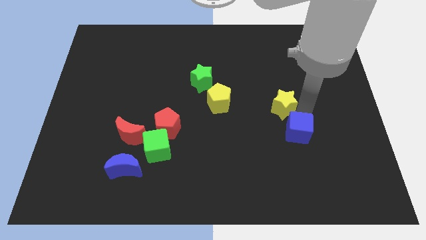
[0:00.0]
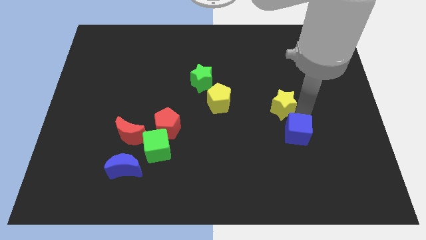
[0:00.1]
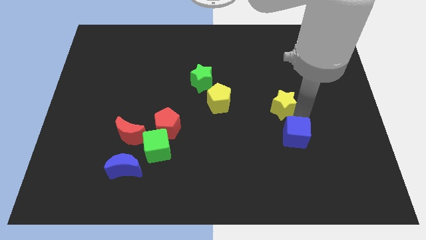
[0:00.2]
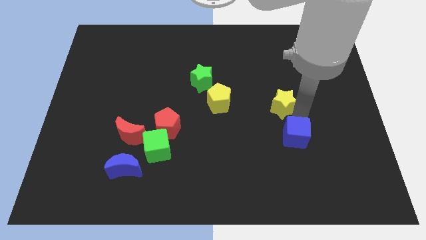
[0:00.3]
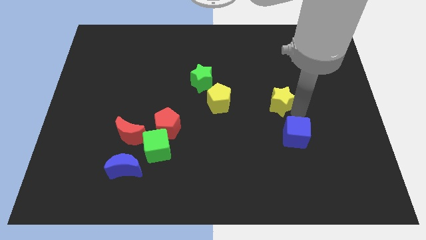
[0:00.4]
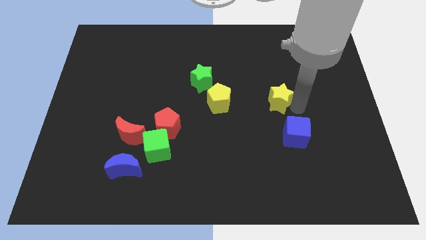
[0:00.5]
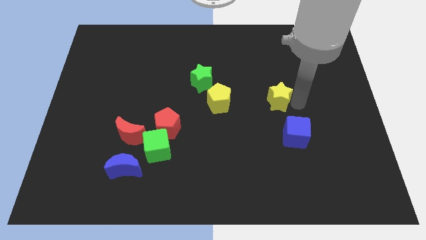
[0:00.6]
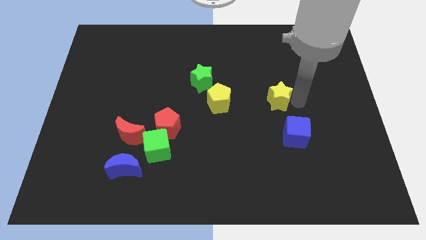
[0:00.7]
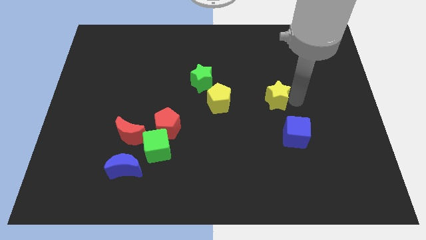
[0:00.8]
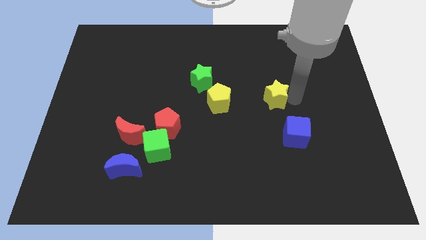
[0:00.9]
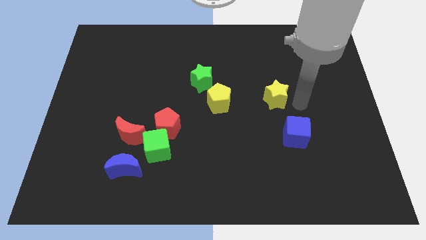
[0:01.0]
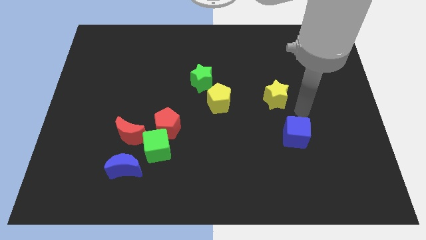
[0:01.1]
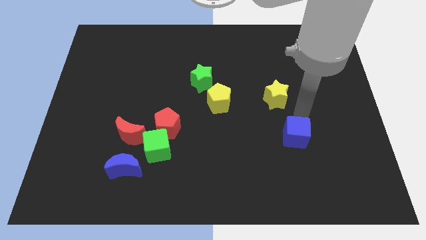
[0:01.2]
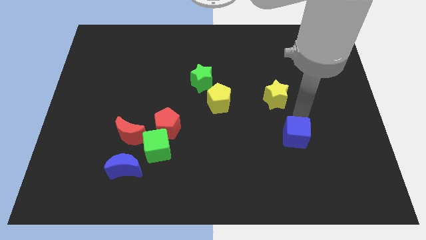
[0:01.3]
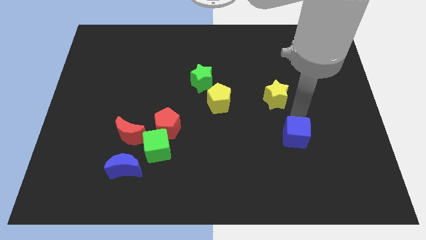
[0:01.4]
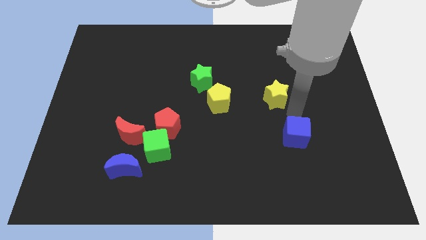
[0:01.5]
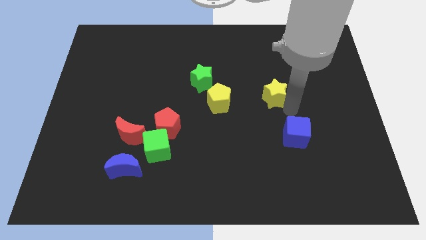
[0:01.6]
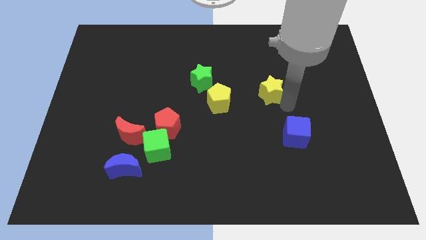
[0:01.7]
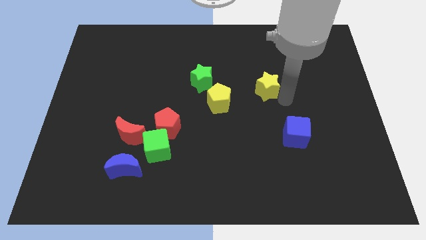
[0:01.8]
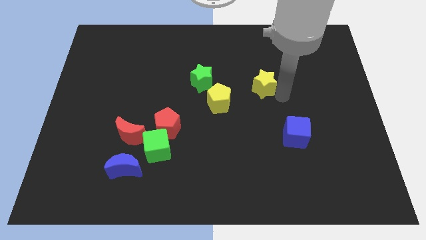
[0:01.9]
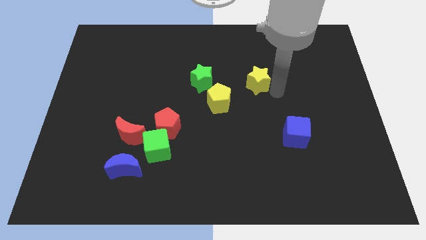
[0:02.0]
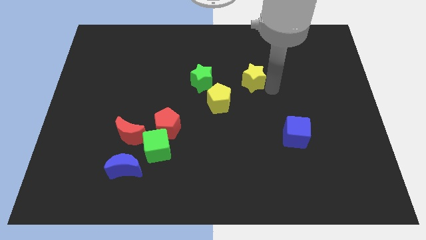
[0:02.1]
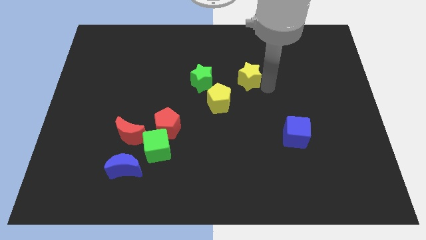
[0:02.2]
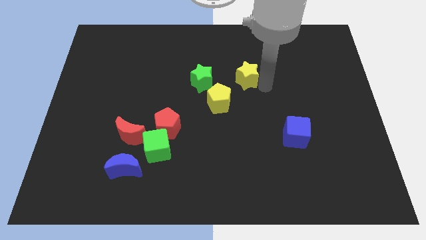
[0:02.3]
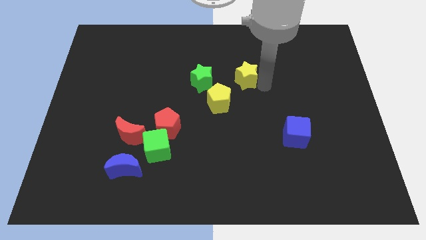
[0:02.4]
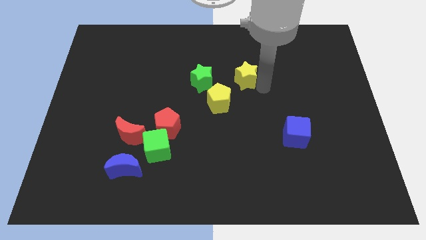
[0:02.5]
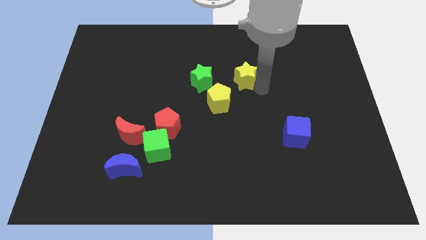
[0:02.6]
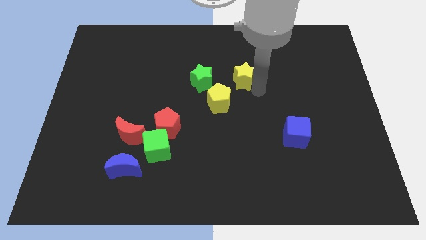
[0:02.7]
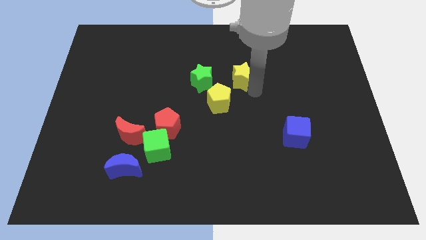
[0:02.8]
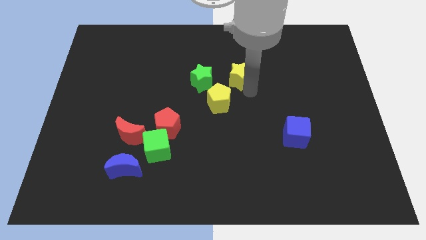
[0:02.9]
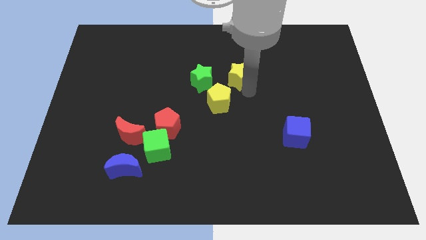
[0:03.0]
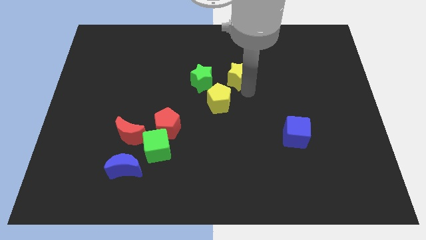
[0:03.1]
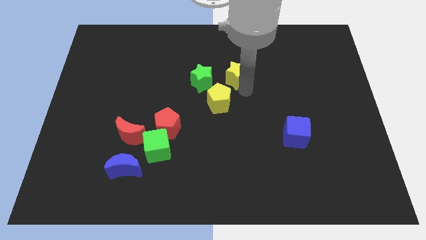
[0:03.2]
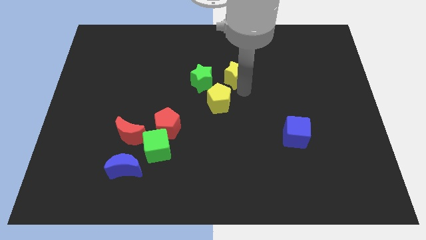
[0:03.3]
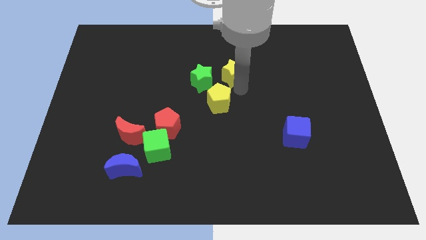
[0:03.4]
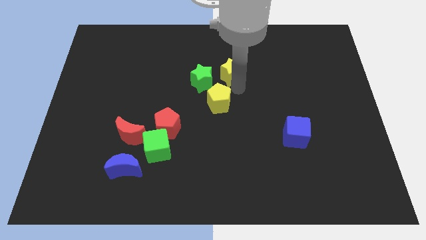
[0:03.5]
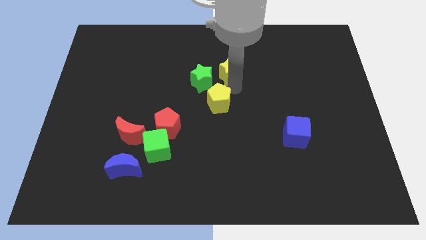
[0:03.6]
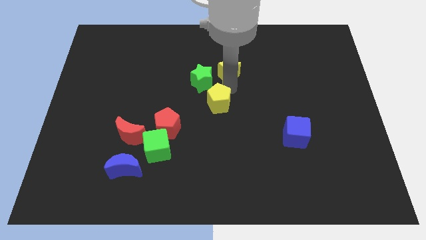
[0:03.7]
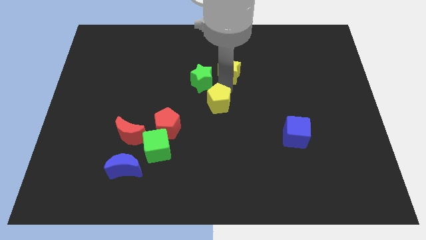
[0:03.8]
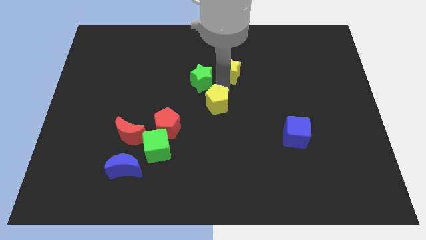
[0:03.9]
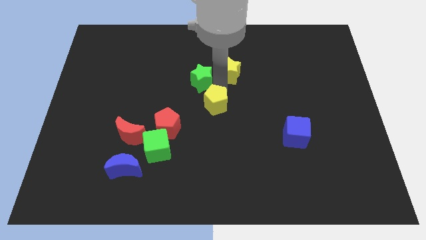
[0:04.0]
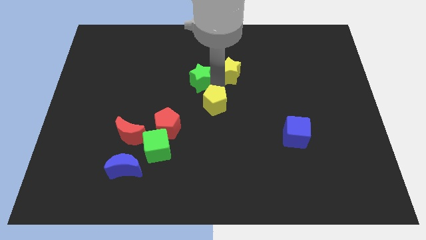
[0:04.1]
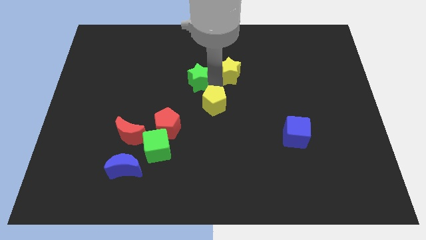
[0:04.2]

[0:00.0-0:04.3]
place the yellow star at the top of the yellow pentagon

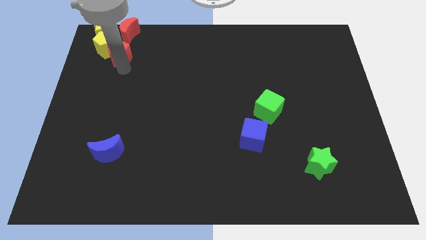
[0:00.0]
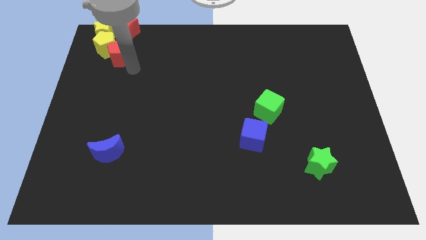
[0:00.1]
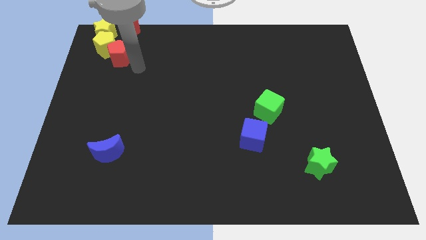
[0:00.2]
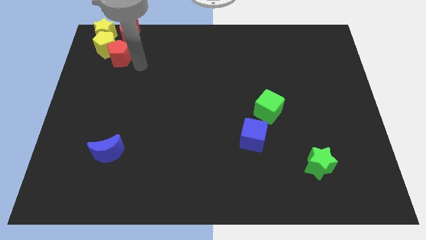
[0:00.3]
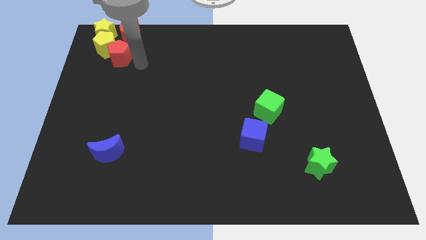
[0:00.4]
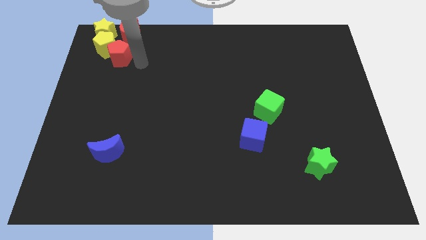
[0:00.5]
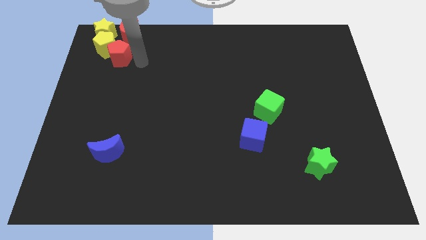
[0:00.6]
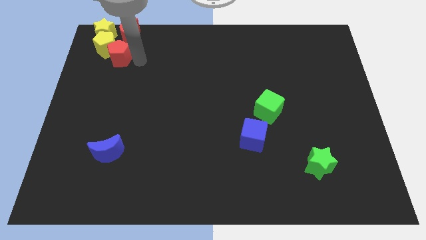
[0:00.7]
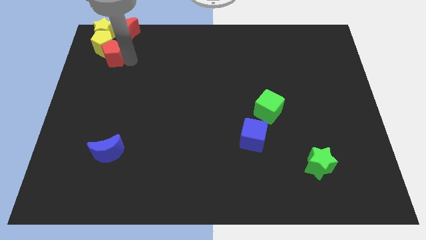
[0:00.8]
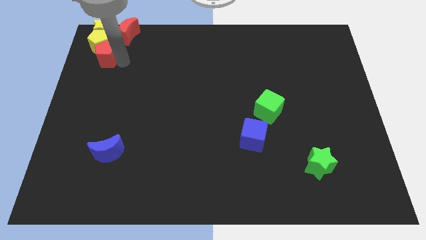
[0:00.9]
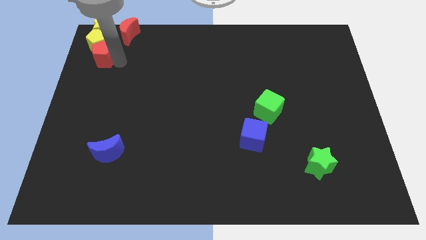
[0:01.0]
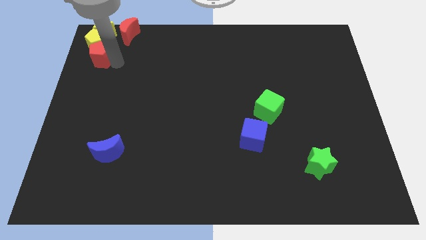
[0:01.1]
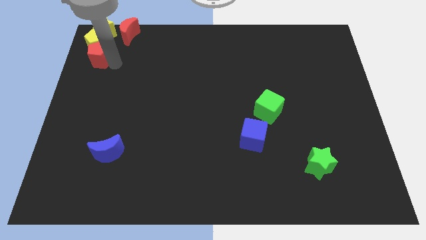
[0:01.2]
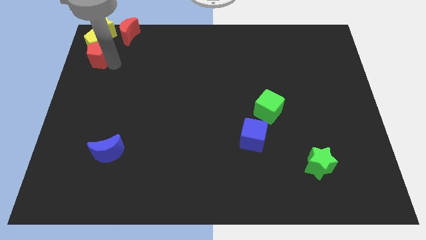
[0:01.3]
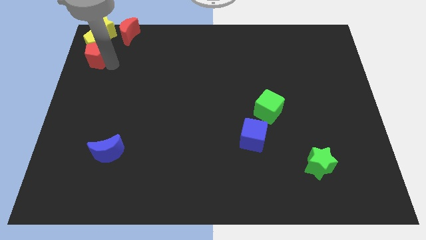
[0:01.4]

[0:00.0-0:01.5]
push the red pentagon into the yellow pentagon

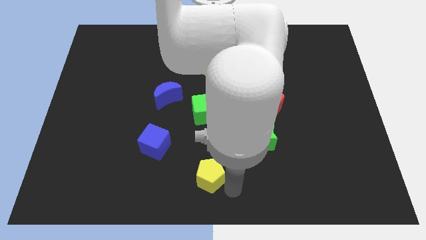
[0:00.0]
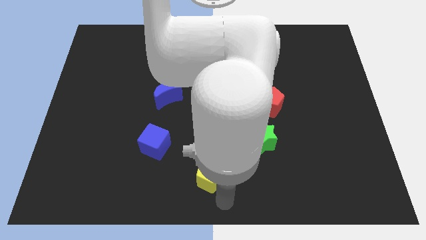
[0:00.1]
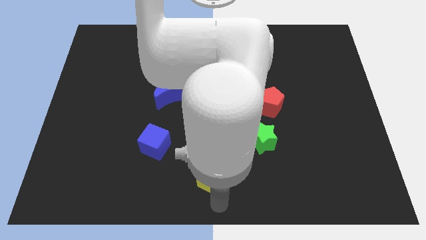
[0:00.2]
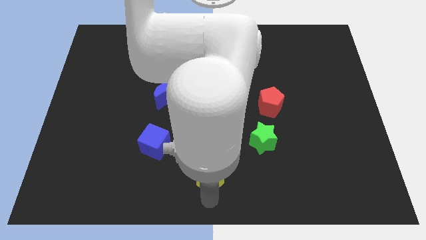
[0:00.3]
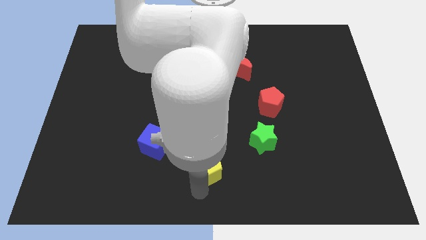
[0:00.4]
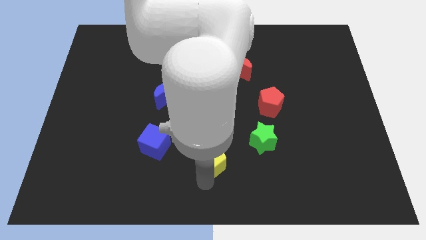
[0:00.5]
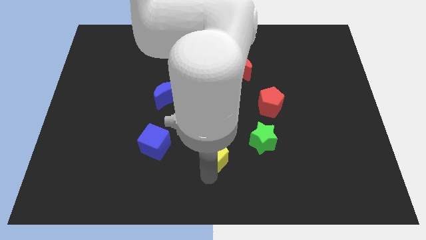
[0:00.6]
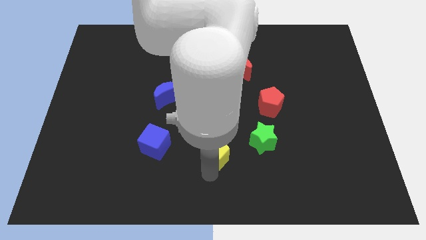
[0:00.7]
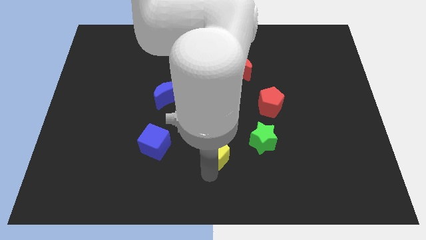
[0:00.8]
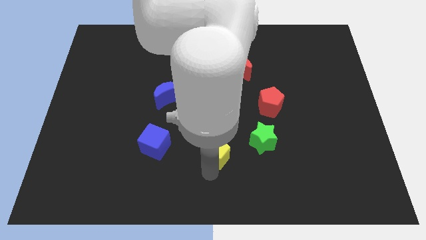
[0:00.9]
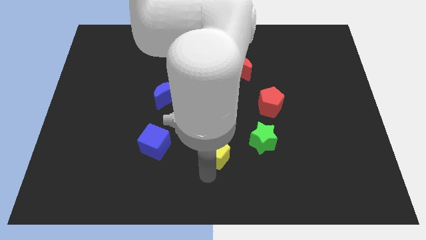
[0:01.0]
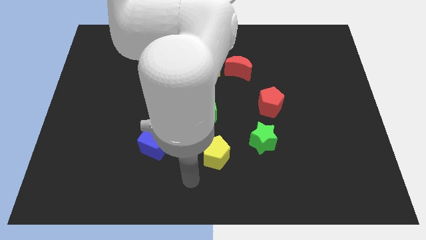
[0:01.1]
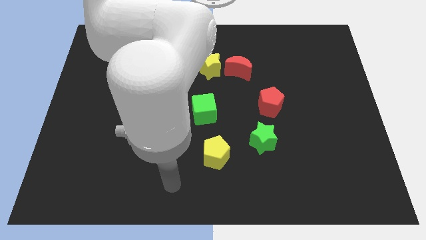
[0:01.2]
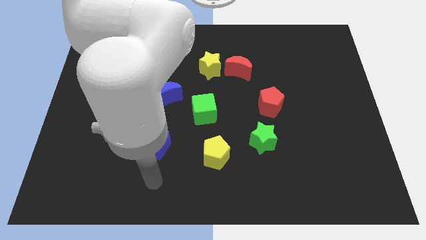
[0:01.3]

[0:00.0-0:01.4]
slightly push the yellow pentagon towards up

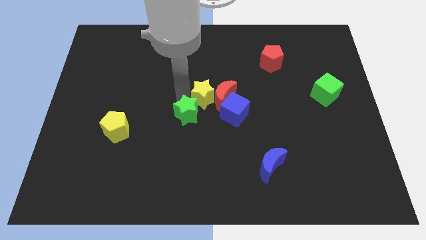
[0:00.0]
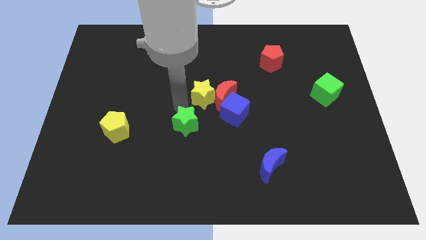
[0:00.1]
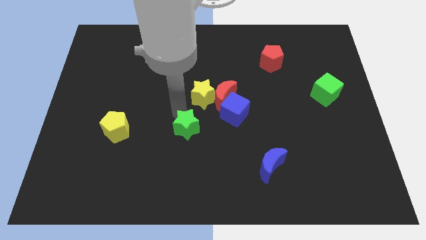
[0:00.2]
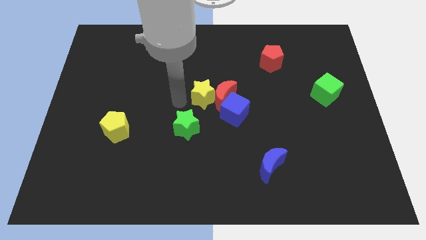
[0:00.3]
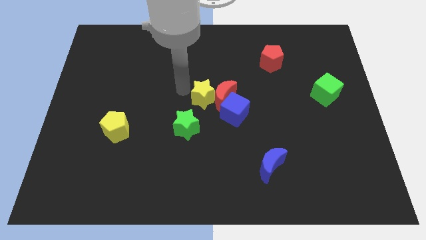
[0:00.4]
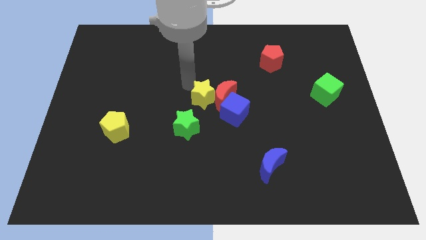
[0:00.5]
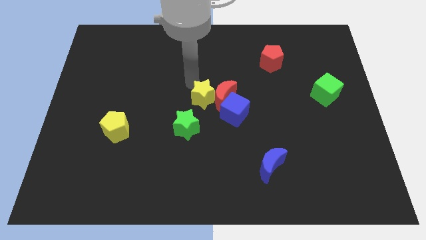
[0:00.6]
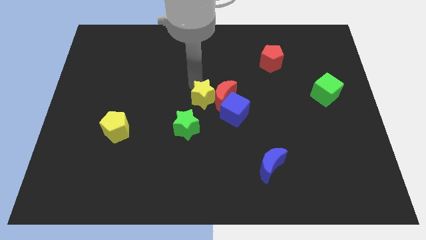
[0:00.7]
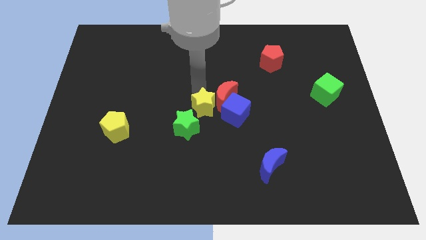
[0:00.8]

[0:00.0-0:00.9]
push the green star towards the bottom of the board

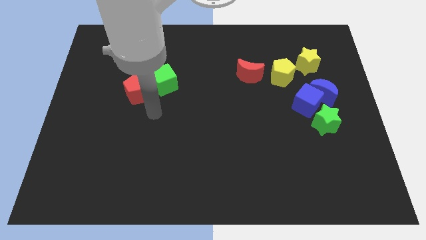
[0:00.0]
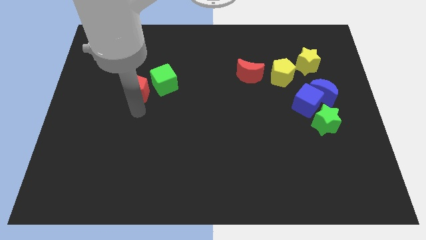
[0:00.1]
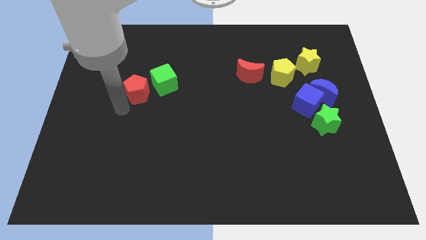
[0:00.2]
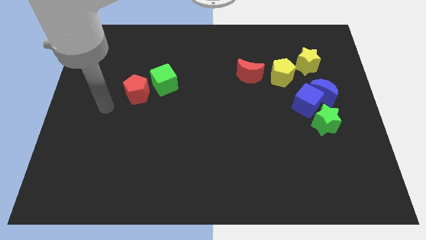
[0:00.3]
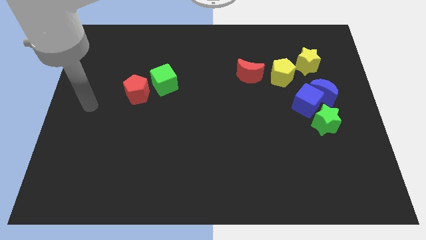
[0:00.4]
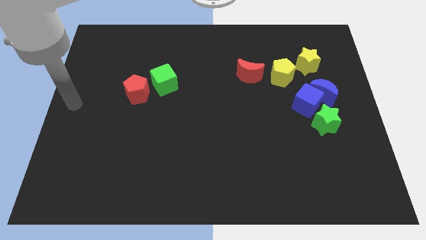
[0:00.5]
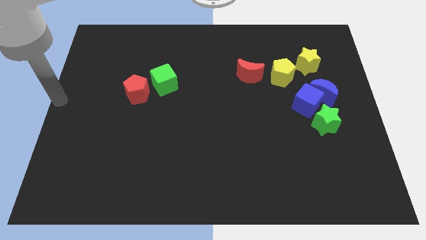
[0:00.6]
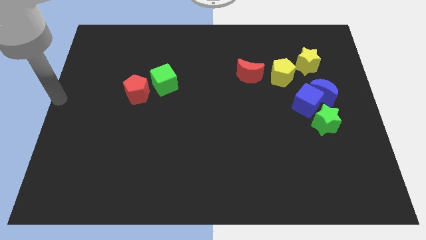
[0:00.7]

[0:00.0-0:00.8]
place arm at the center left
